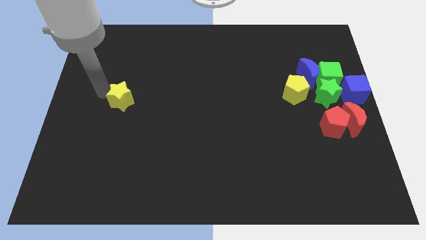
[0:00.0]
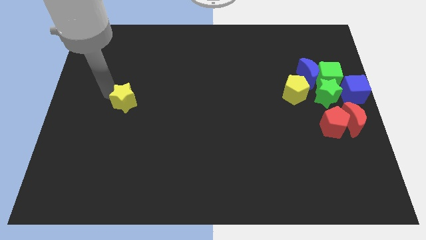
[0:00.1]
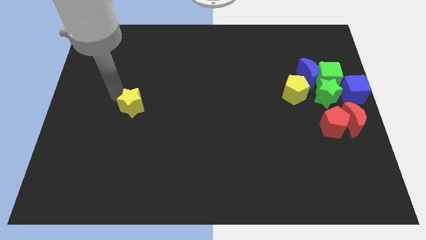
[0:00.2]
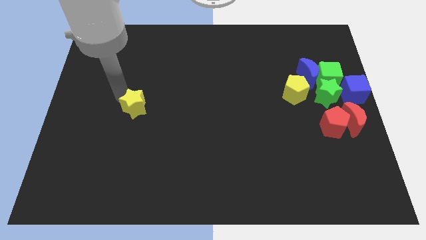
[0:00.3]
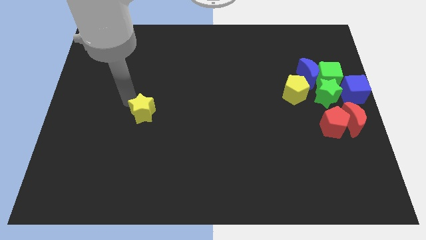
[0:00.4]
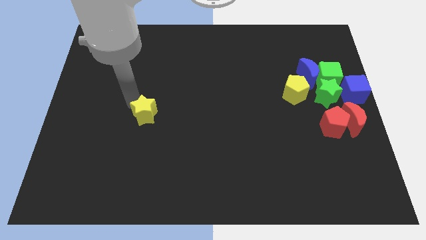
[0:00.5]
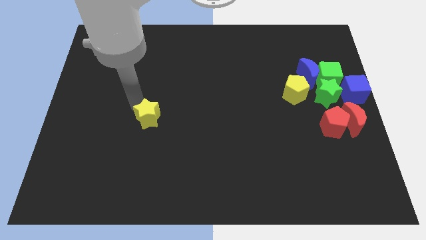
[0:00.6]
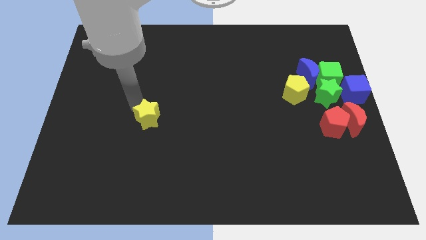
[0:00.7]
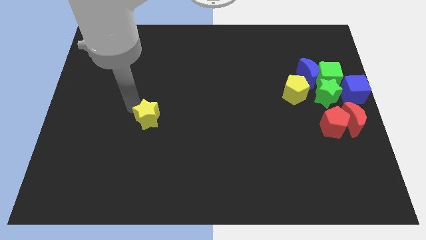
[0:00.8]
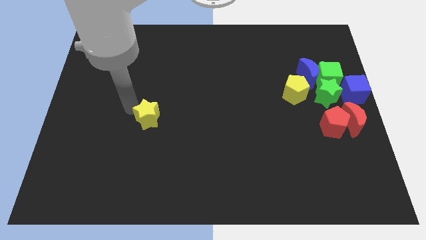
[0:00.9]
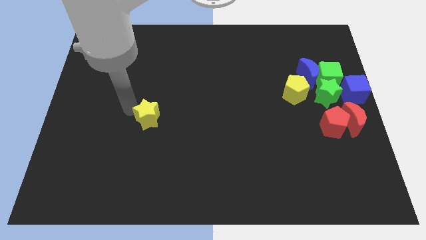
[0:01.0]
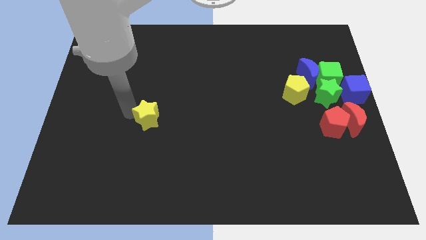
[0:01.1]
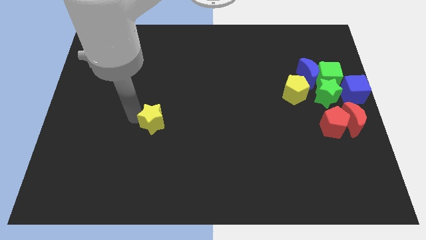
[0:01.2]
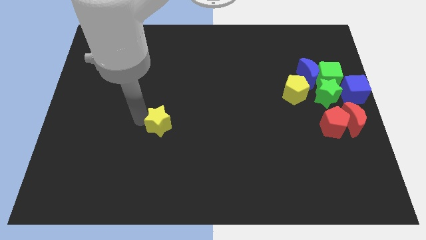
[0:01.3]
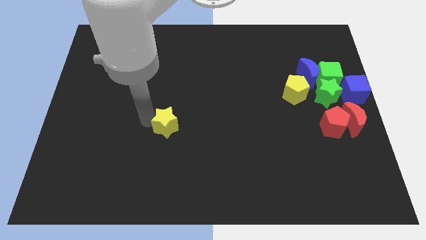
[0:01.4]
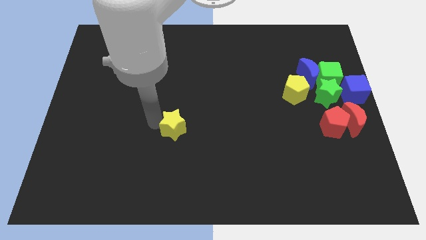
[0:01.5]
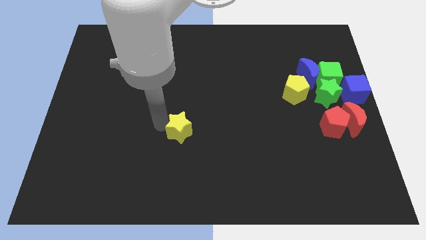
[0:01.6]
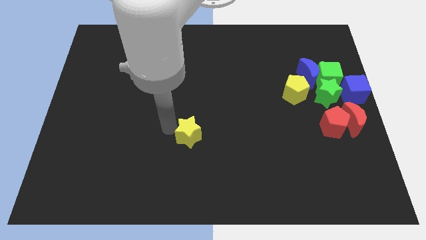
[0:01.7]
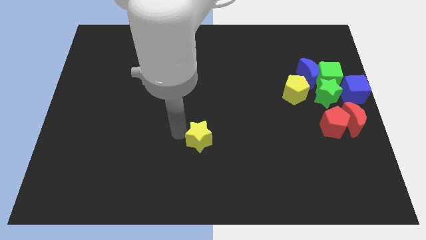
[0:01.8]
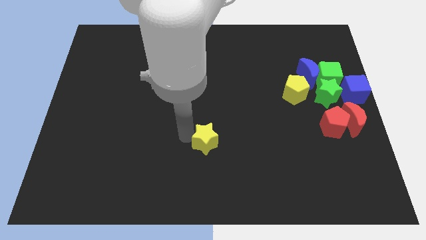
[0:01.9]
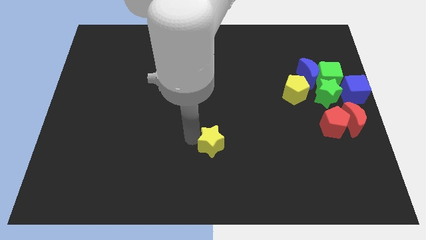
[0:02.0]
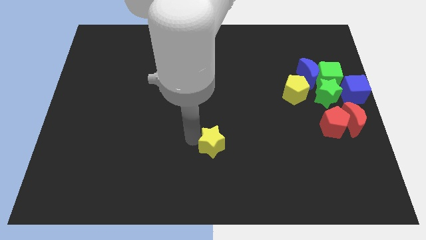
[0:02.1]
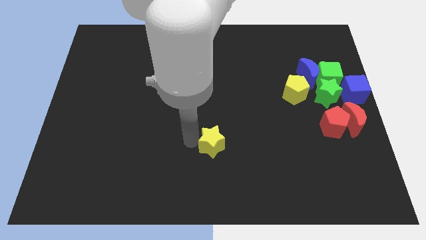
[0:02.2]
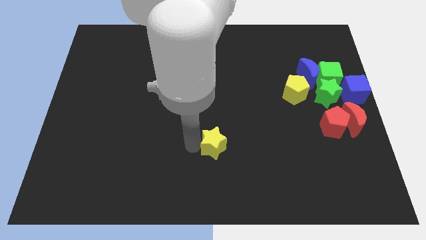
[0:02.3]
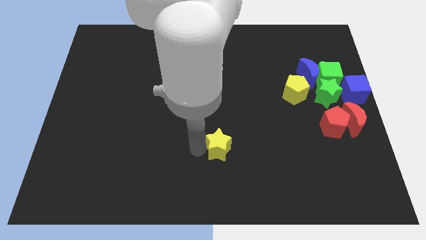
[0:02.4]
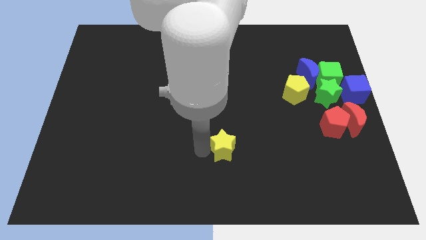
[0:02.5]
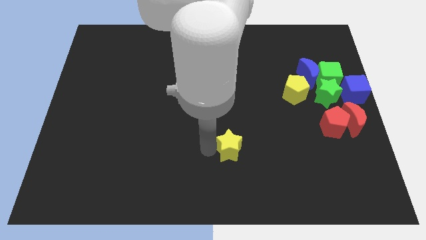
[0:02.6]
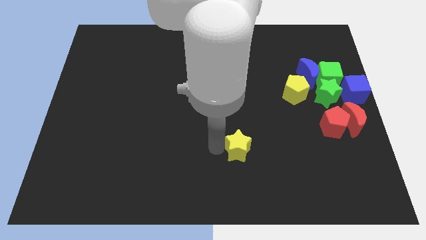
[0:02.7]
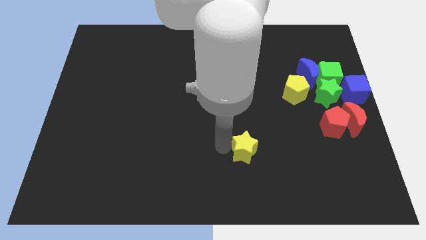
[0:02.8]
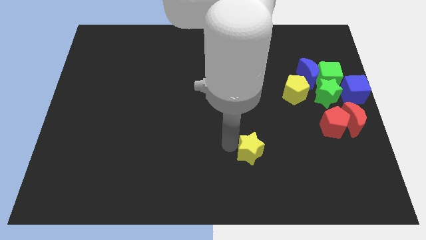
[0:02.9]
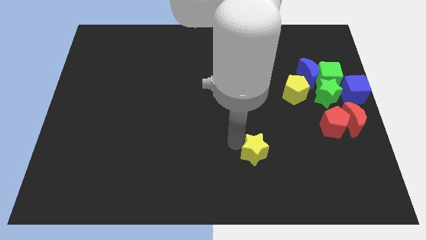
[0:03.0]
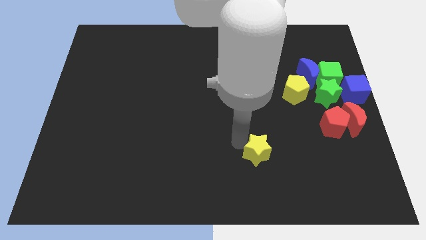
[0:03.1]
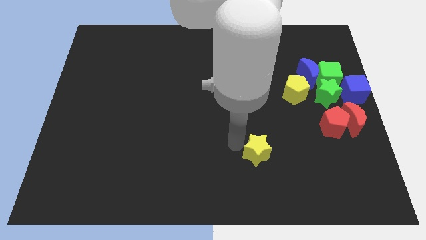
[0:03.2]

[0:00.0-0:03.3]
push the yellow star to the bottom left side of the yellow pentagon

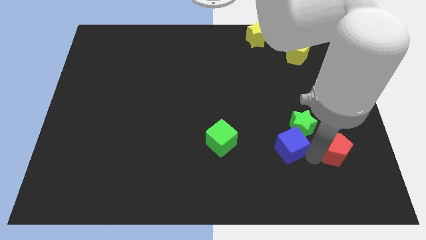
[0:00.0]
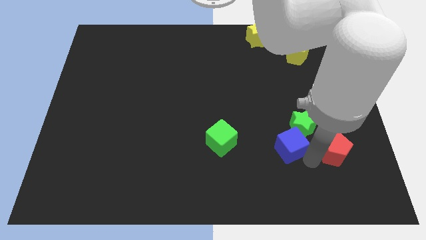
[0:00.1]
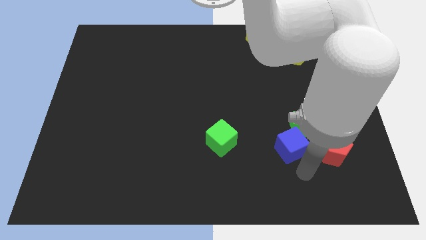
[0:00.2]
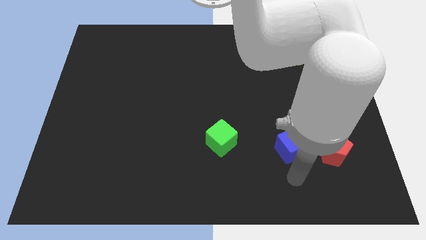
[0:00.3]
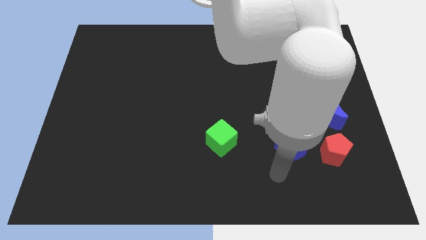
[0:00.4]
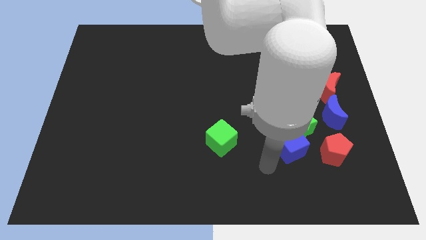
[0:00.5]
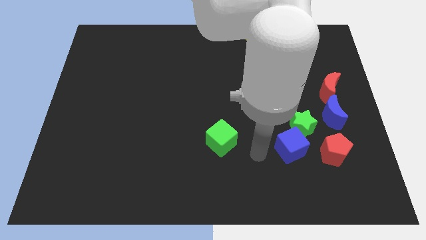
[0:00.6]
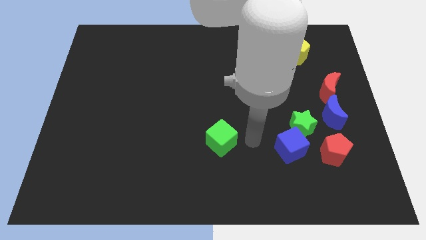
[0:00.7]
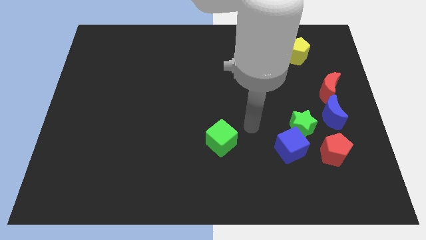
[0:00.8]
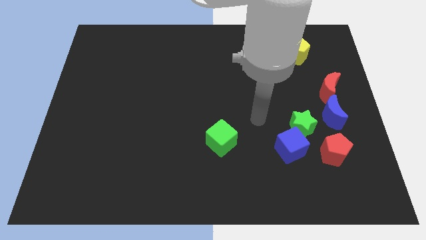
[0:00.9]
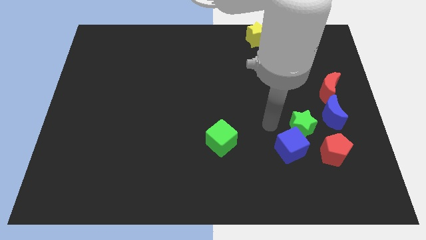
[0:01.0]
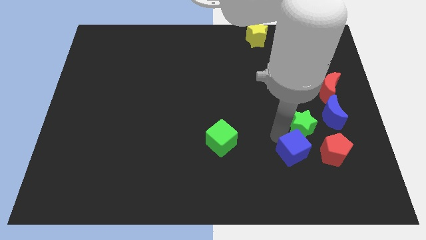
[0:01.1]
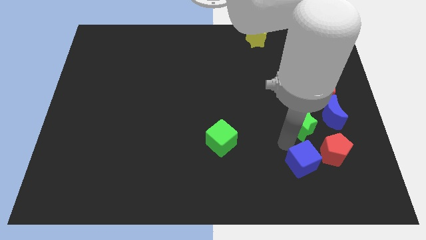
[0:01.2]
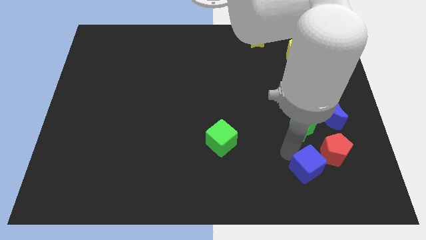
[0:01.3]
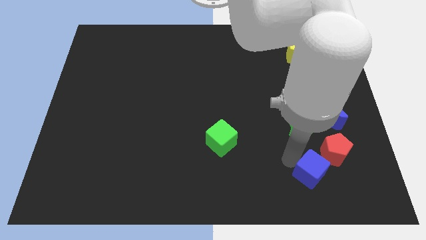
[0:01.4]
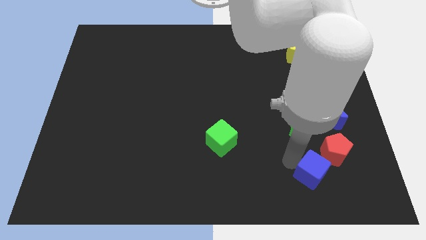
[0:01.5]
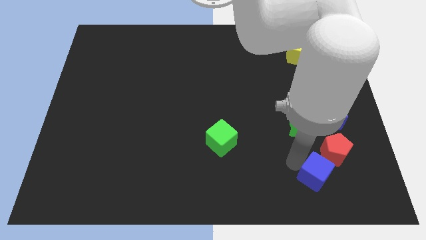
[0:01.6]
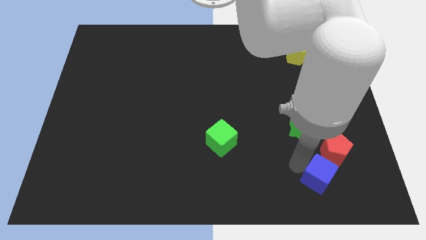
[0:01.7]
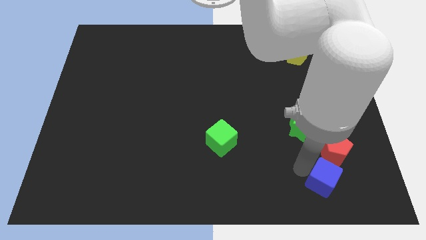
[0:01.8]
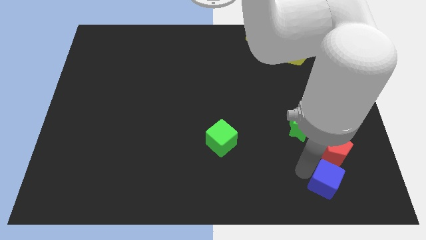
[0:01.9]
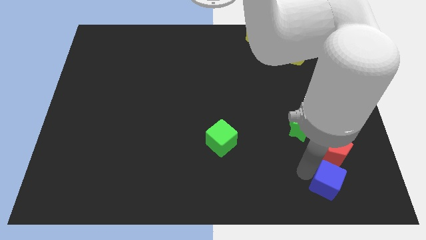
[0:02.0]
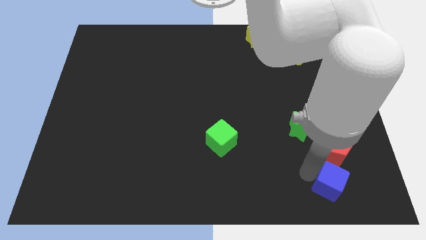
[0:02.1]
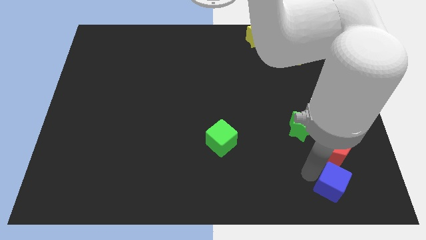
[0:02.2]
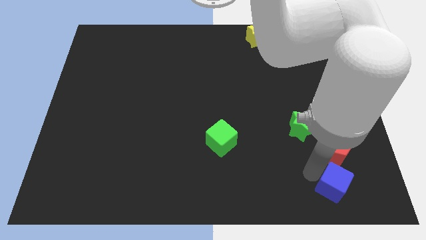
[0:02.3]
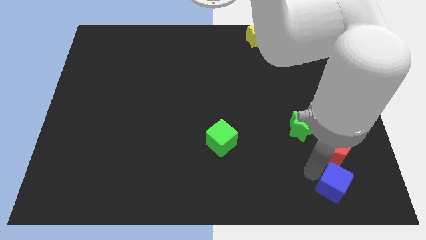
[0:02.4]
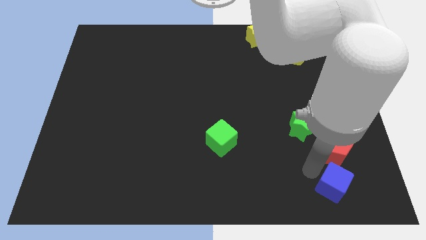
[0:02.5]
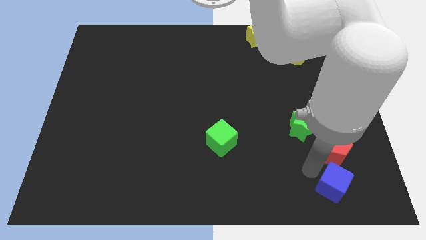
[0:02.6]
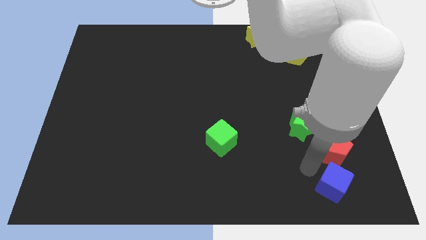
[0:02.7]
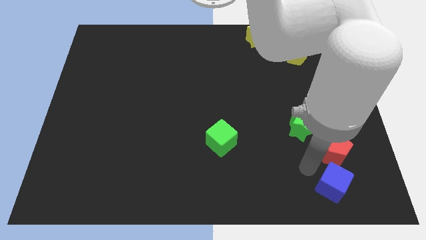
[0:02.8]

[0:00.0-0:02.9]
place the blue cube below the red pentagon

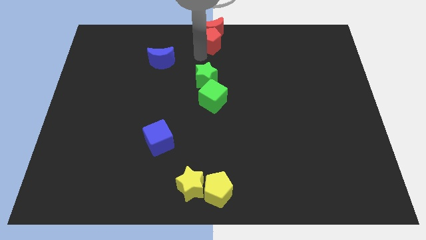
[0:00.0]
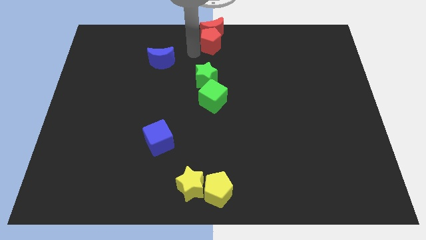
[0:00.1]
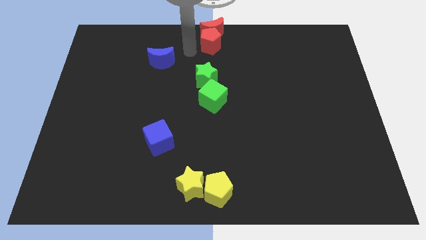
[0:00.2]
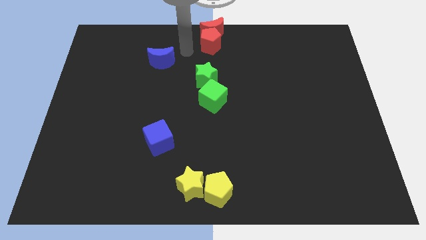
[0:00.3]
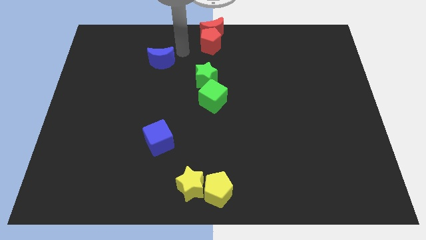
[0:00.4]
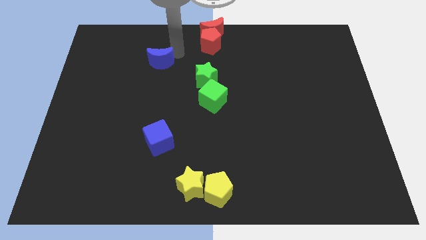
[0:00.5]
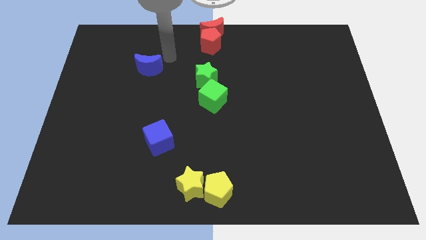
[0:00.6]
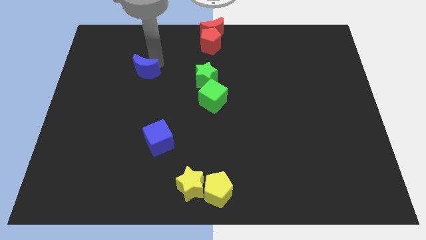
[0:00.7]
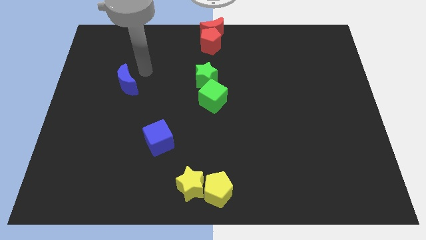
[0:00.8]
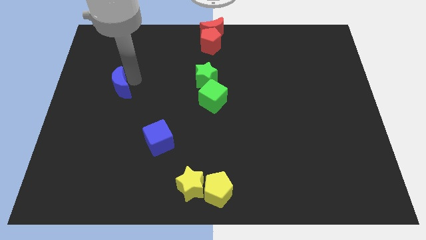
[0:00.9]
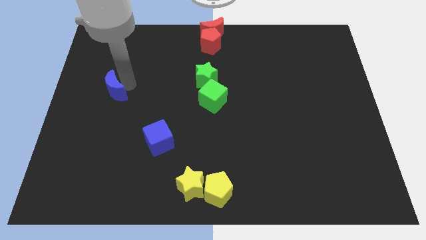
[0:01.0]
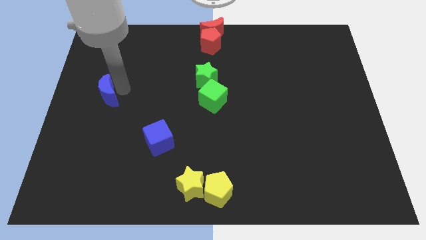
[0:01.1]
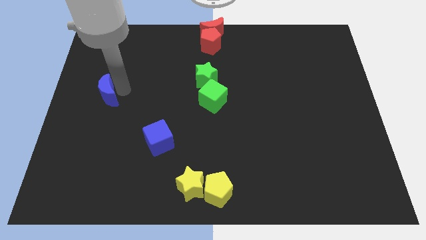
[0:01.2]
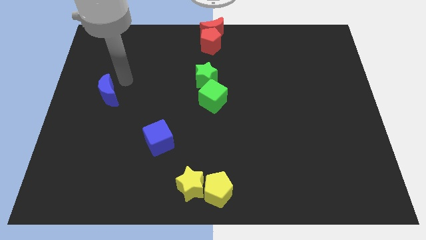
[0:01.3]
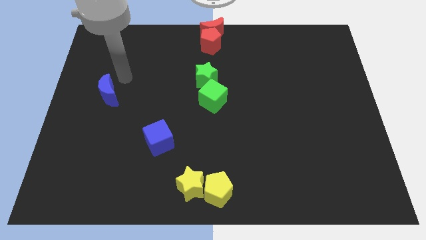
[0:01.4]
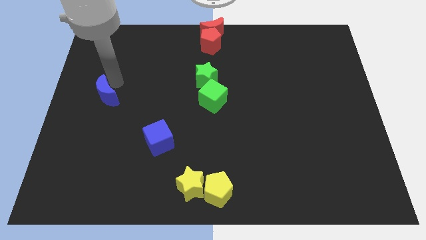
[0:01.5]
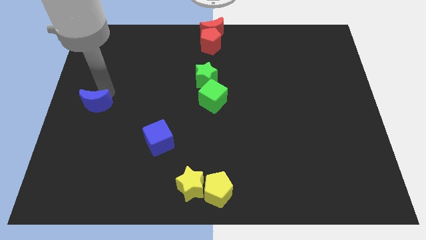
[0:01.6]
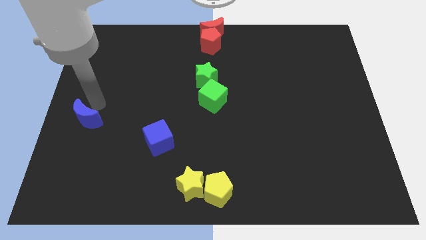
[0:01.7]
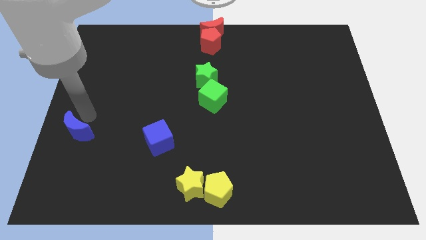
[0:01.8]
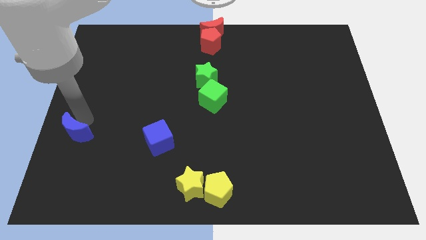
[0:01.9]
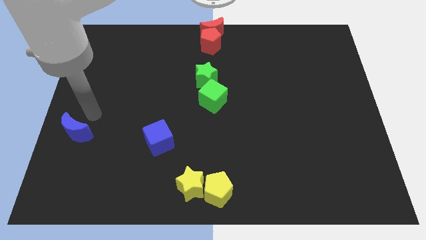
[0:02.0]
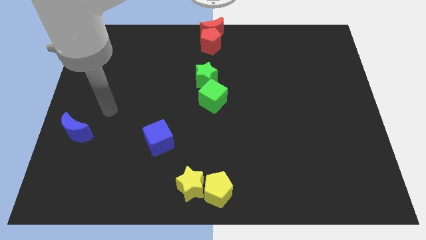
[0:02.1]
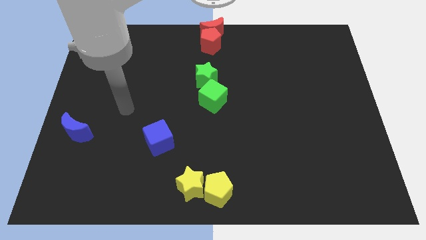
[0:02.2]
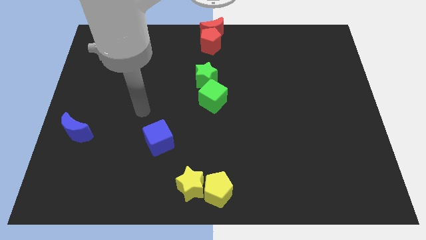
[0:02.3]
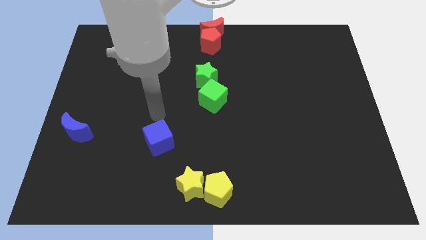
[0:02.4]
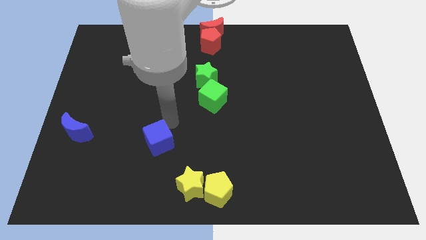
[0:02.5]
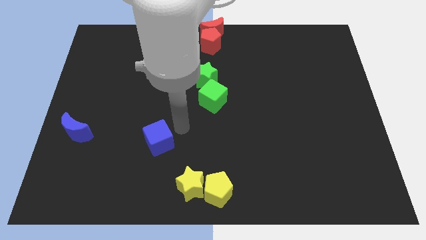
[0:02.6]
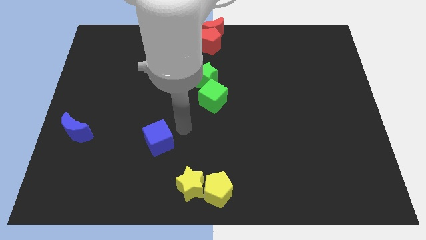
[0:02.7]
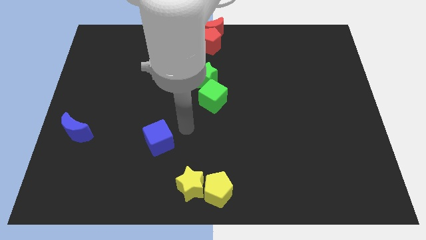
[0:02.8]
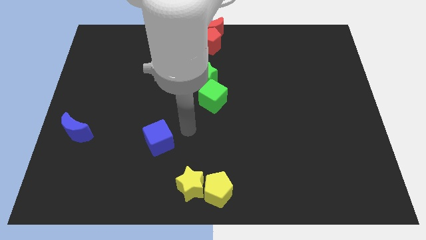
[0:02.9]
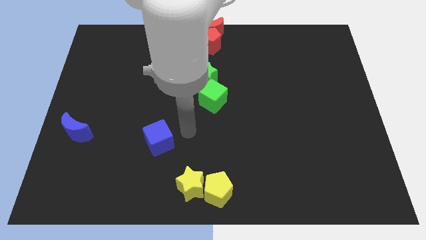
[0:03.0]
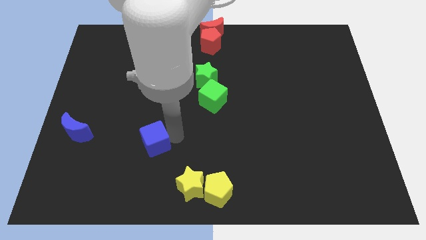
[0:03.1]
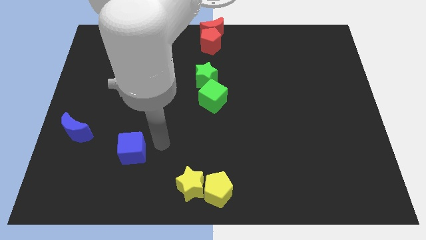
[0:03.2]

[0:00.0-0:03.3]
move the blue moon to the centre left of the board
